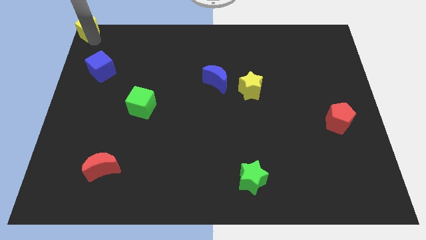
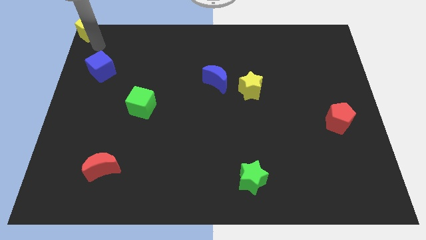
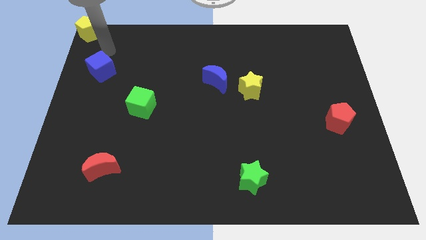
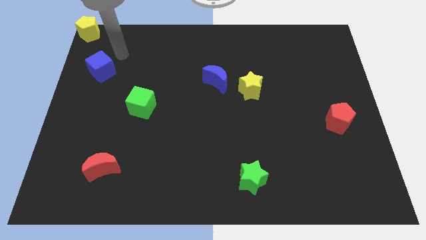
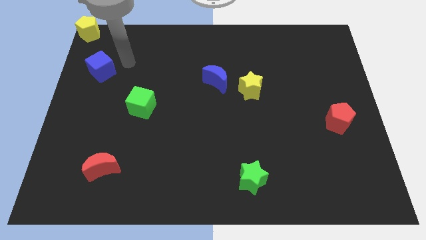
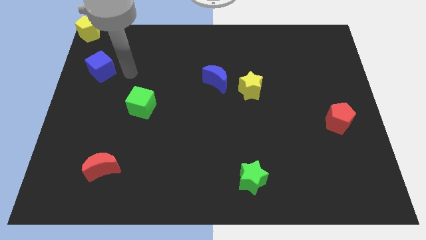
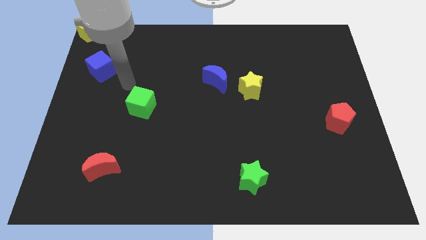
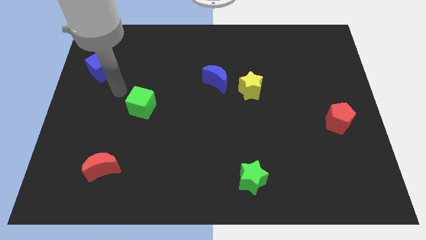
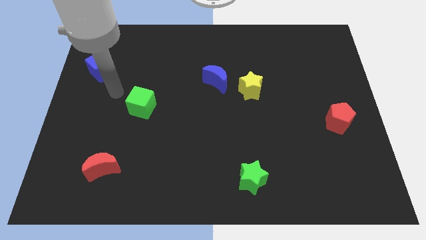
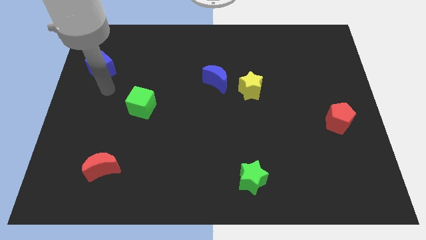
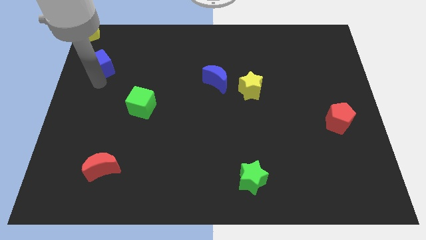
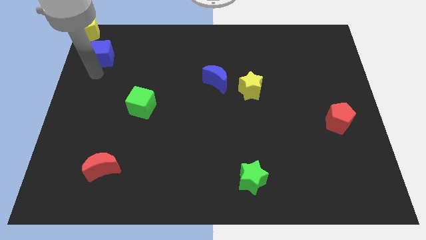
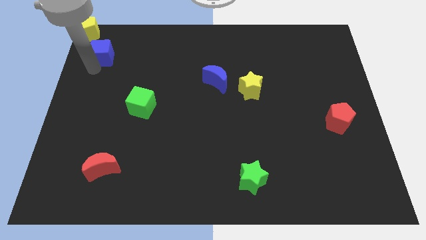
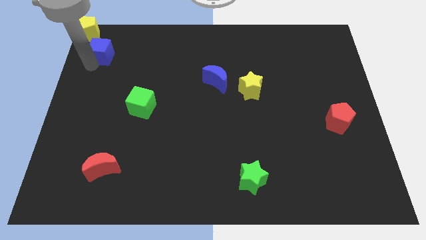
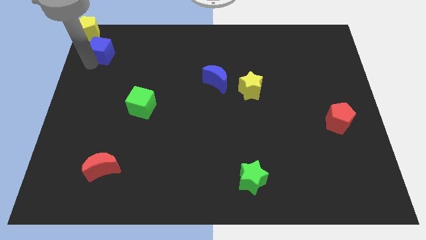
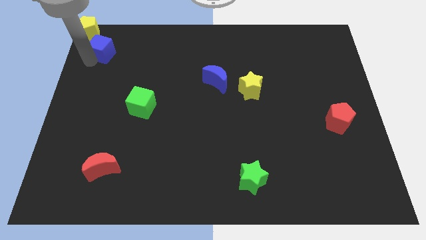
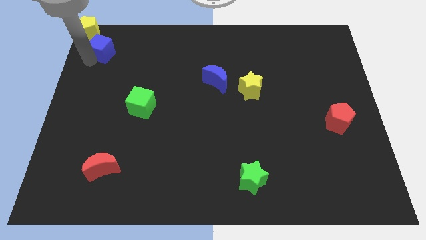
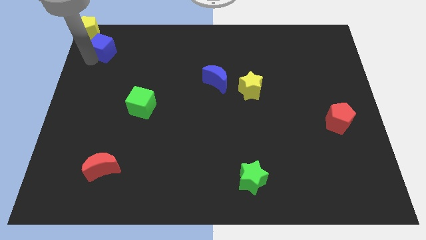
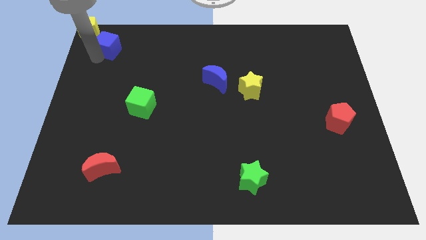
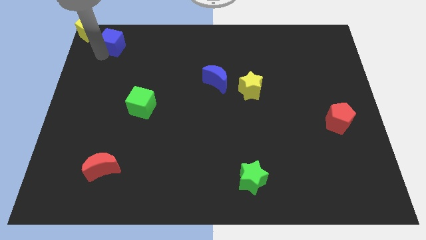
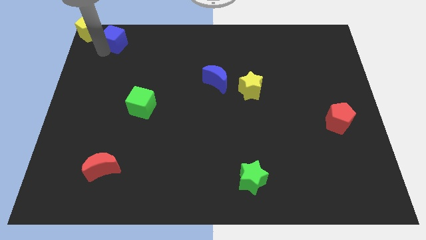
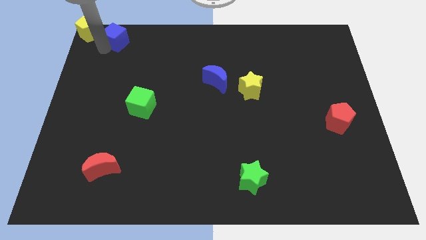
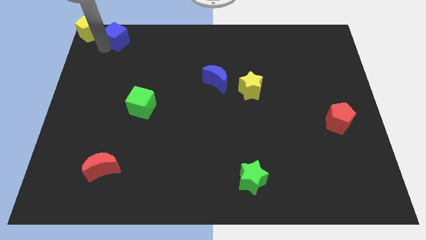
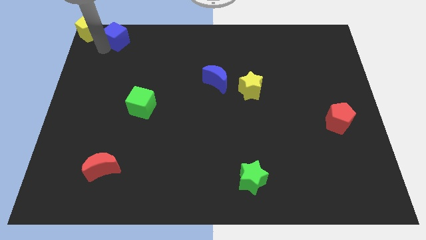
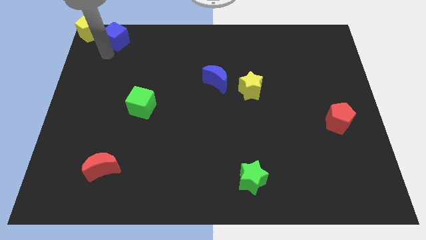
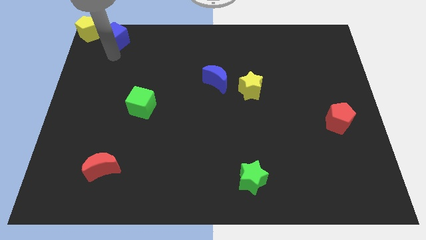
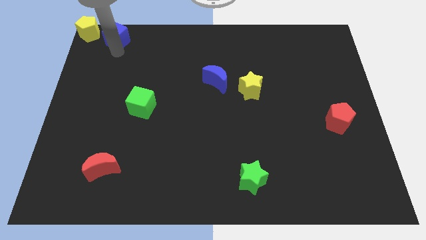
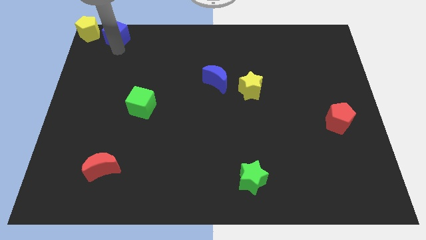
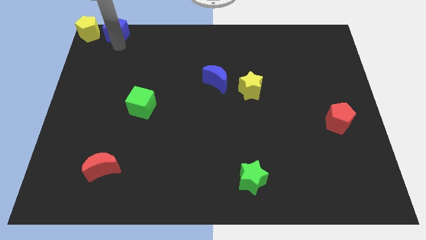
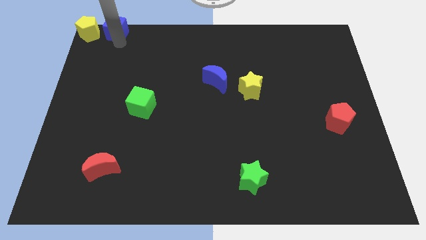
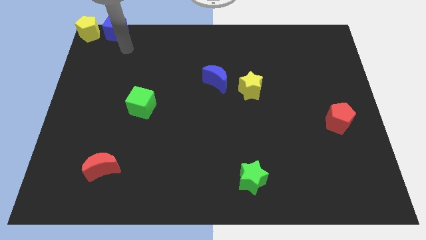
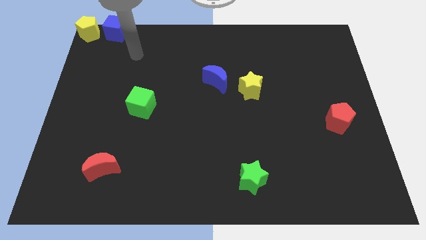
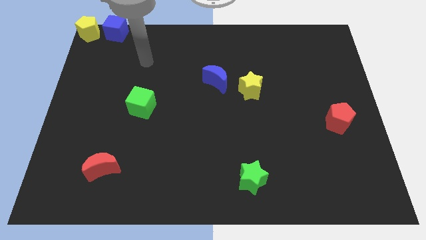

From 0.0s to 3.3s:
move the blue cube parallel right to the yellow pentagon

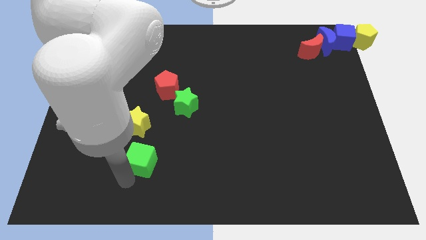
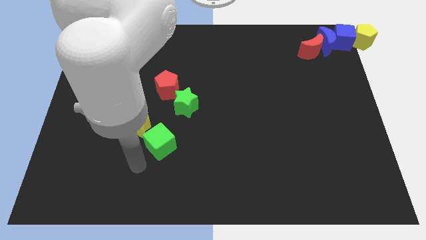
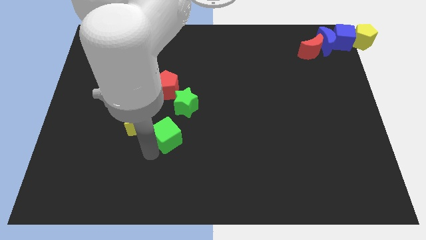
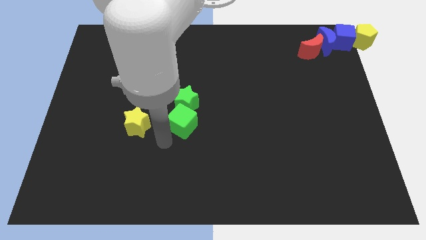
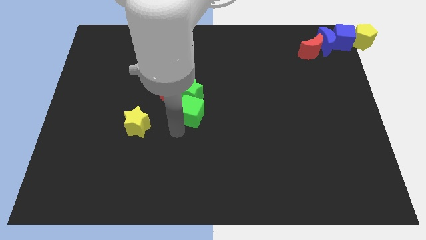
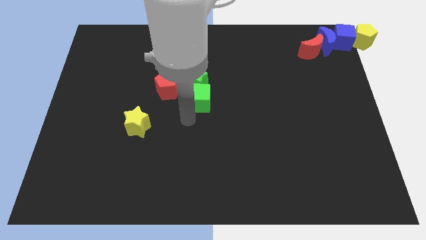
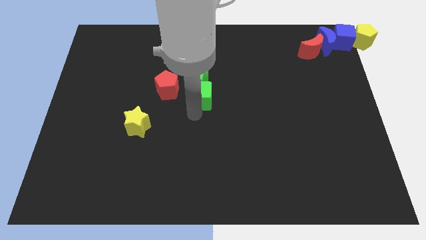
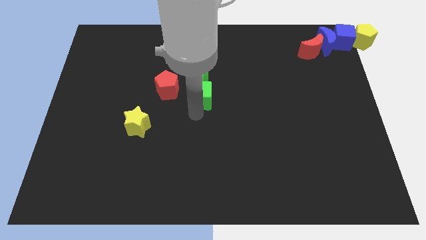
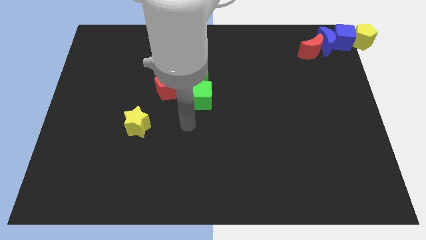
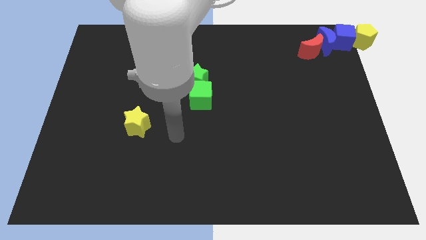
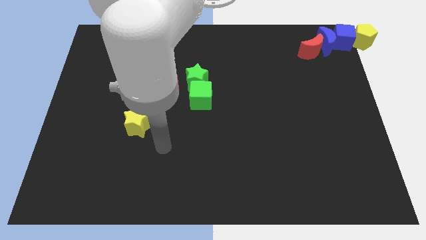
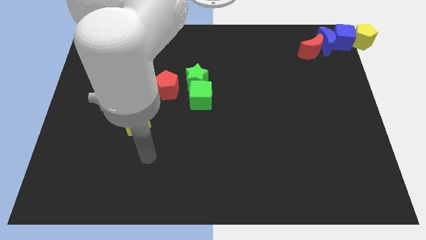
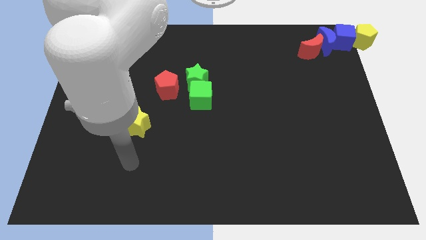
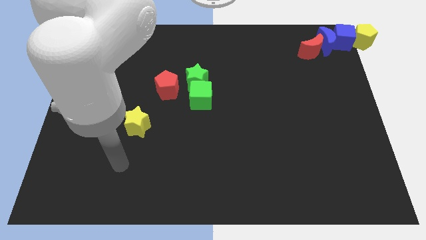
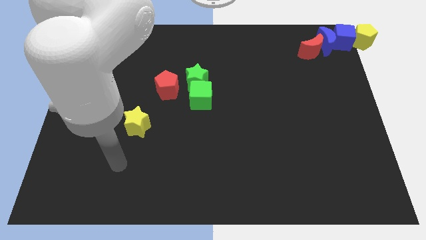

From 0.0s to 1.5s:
push the green cube into the green star

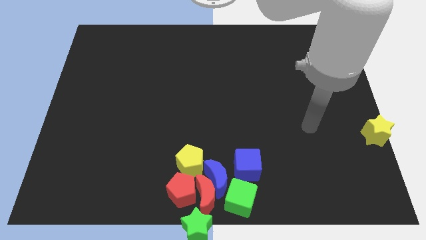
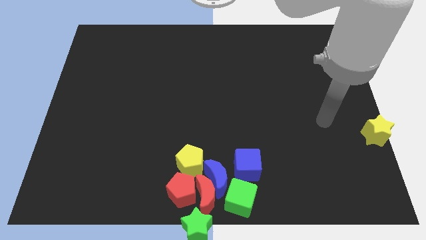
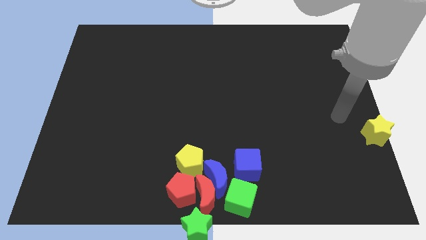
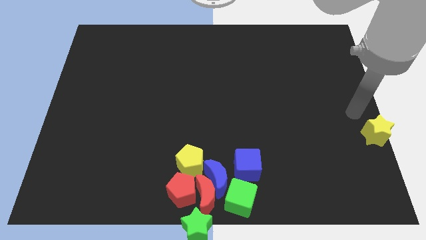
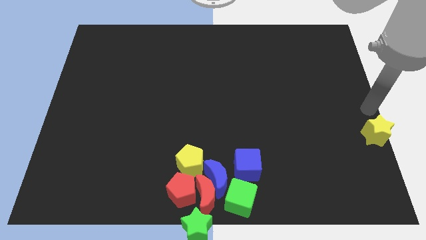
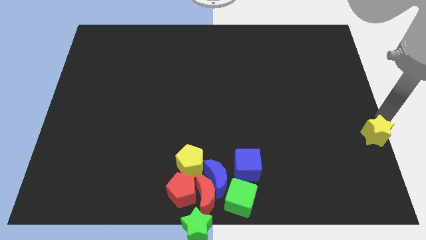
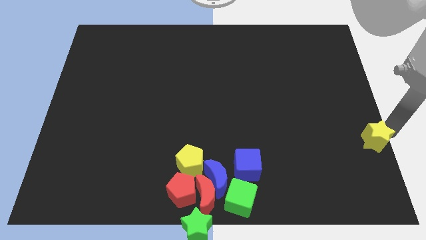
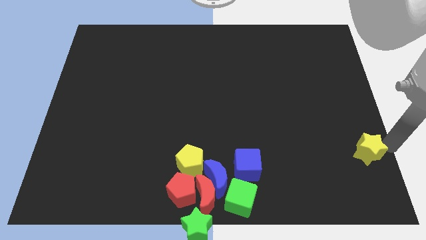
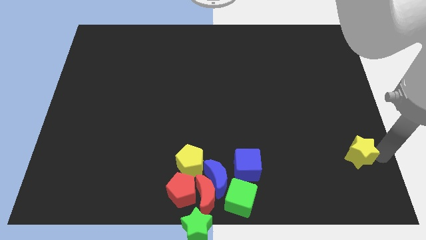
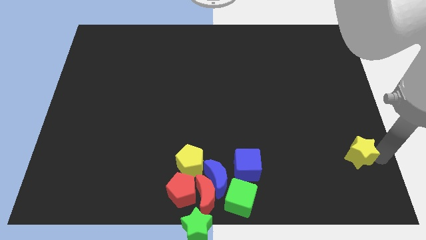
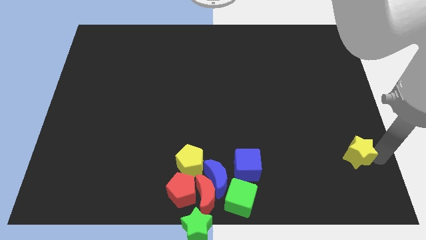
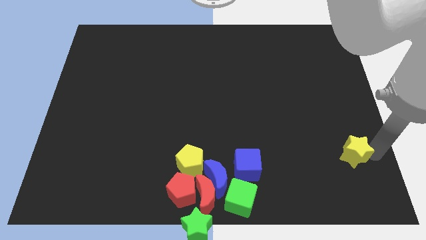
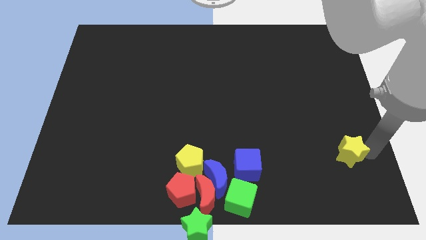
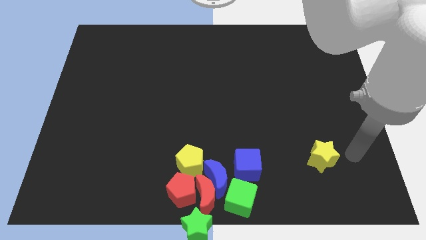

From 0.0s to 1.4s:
push the yellow star towards the group of blocks

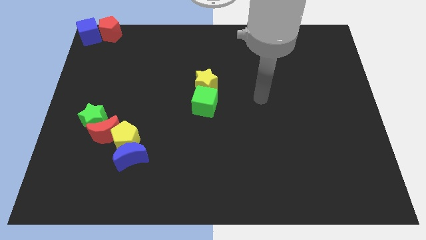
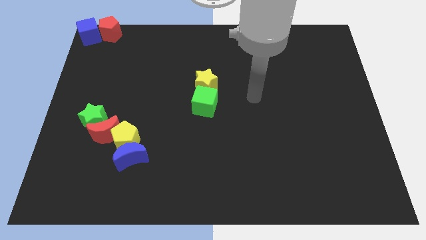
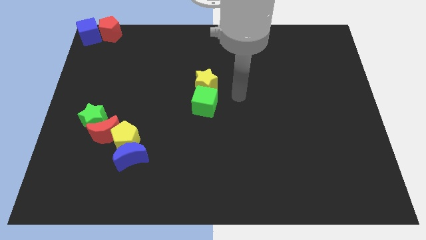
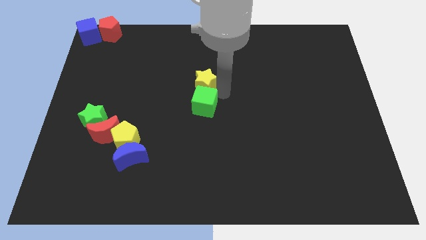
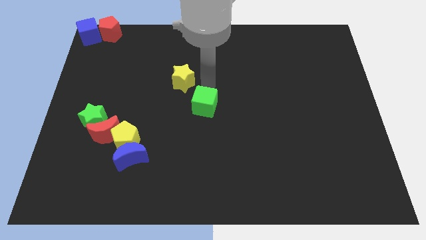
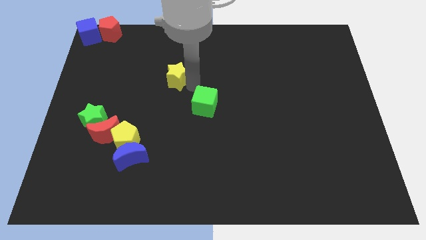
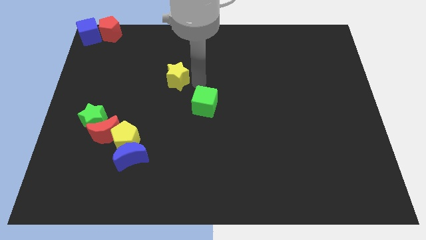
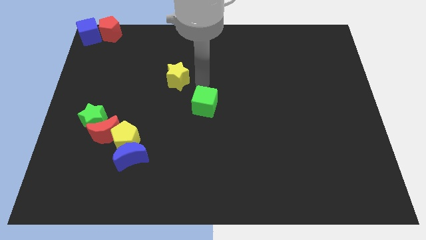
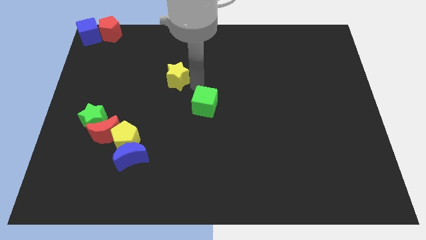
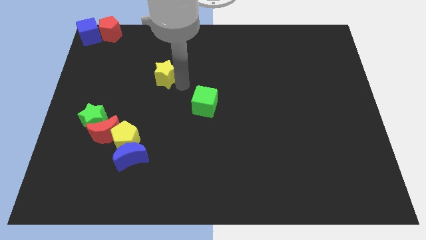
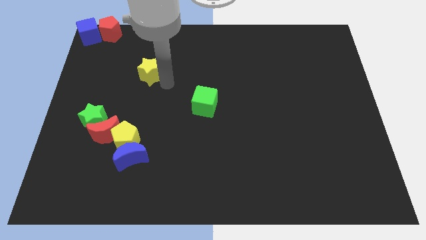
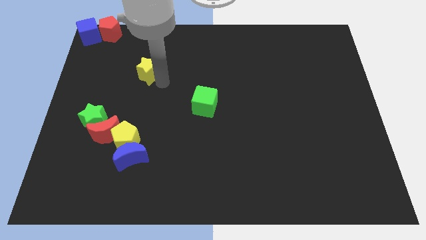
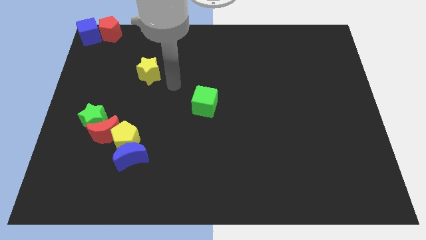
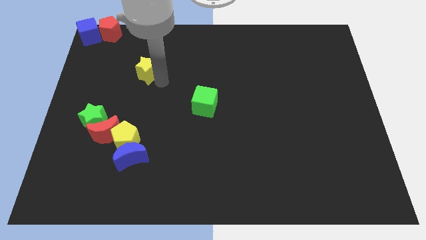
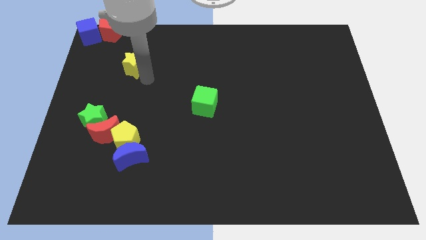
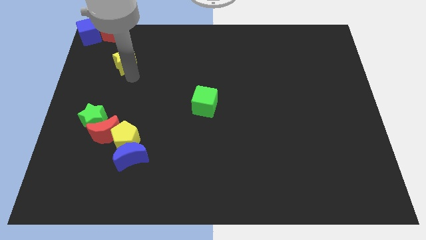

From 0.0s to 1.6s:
place the yellow star above the yellow pentagon

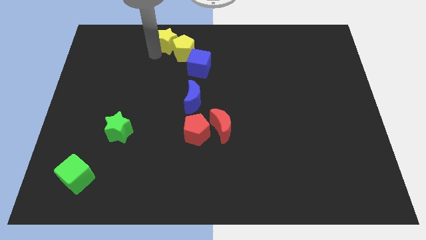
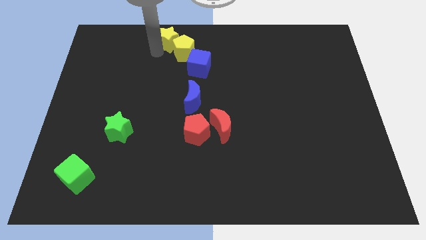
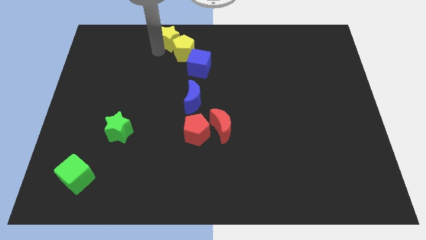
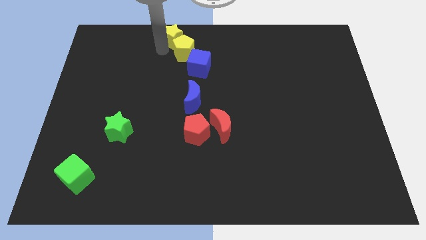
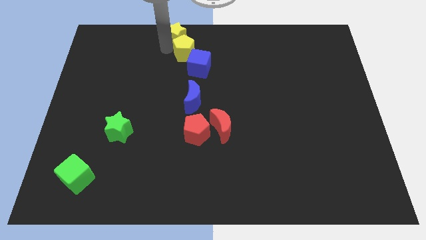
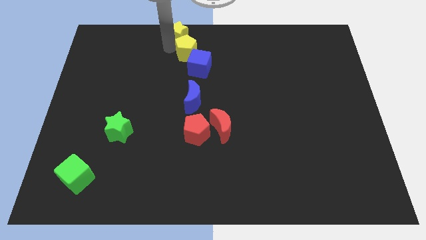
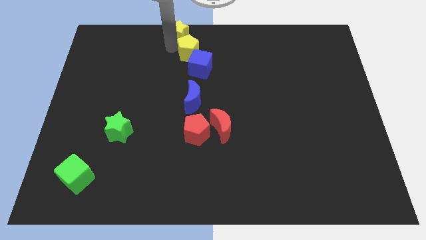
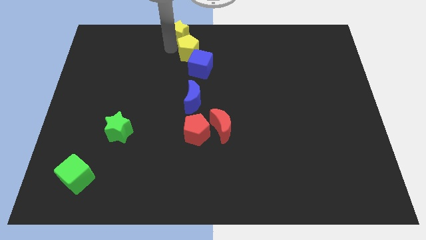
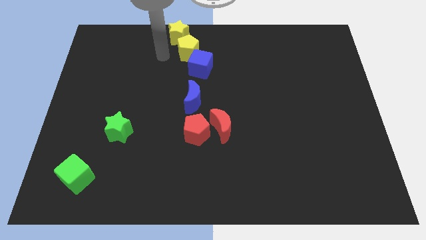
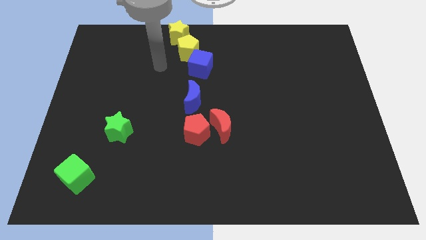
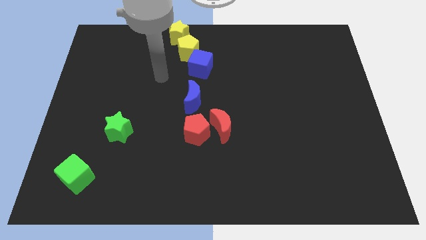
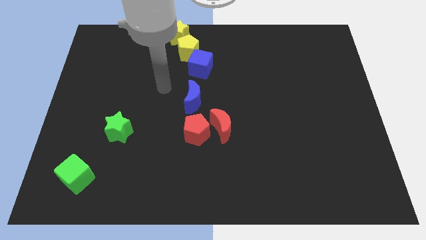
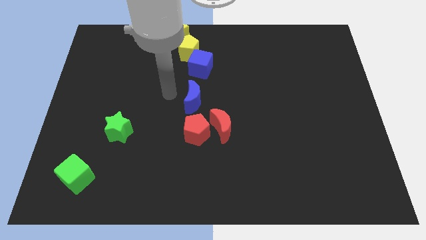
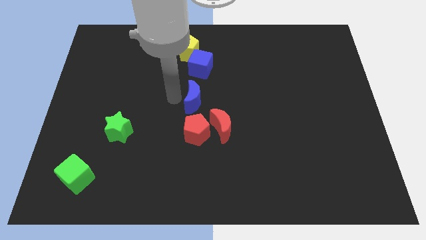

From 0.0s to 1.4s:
place yellow star above yellow pentagon
